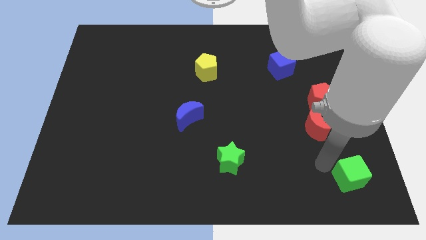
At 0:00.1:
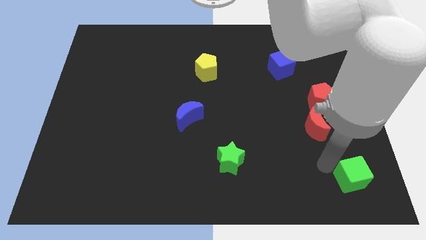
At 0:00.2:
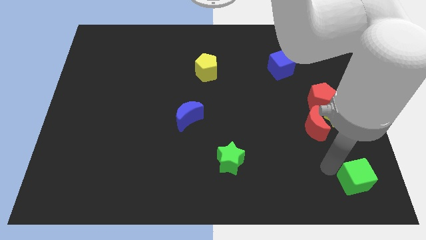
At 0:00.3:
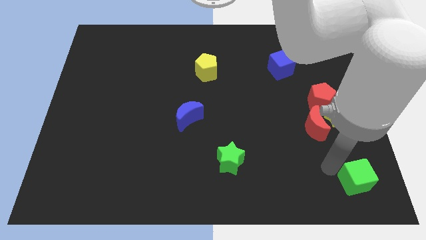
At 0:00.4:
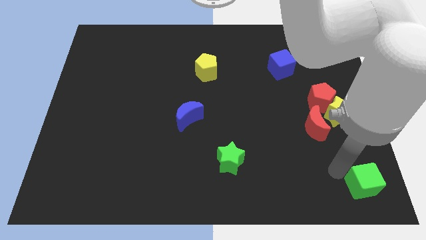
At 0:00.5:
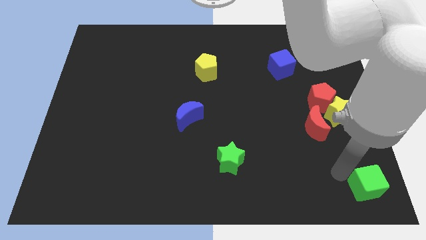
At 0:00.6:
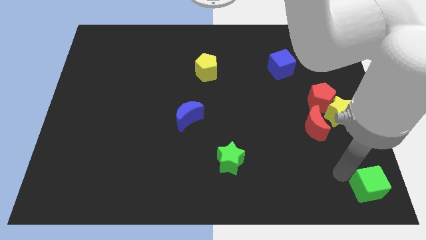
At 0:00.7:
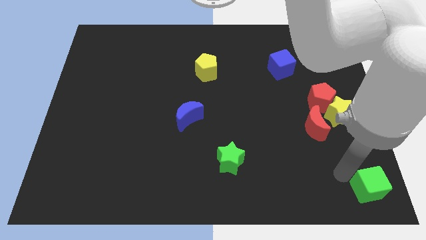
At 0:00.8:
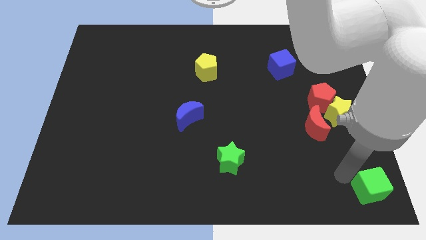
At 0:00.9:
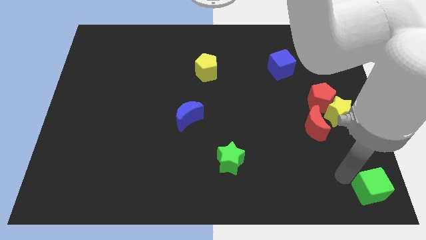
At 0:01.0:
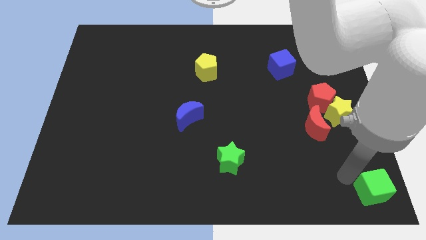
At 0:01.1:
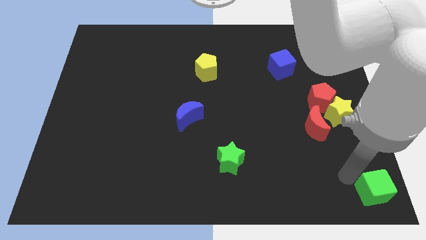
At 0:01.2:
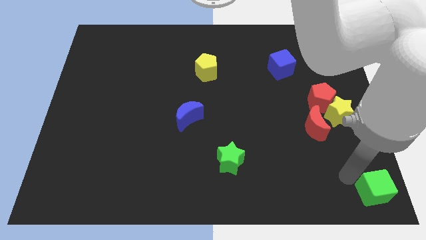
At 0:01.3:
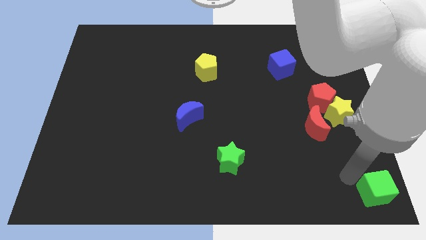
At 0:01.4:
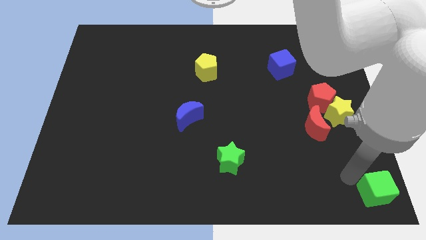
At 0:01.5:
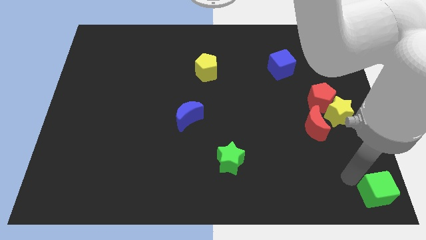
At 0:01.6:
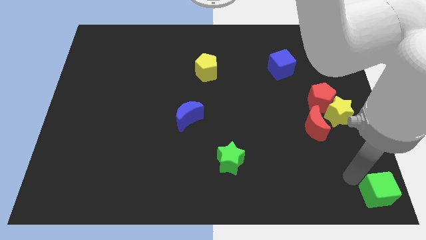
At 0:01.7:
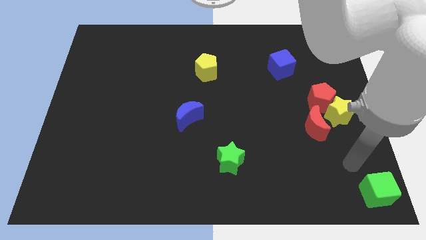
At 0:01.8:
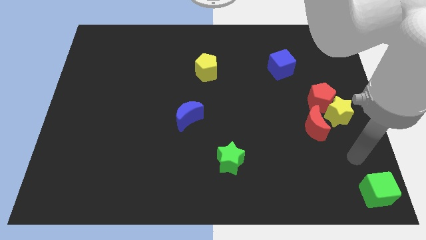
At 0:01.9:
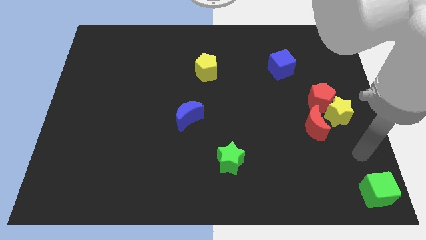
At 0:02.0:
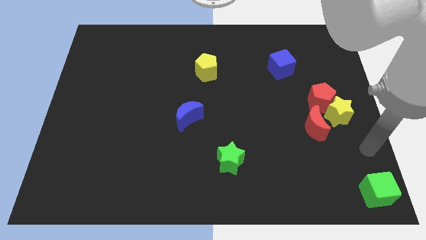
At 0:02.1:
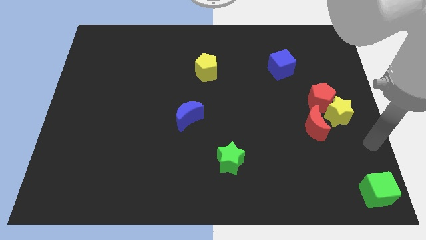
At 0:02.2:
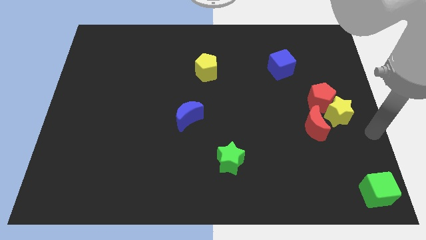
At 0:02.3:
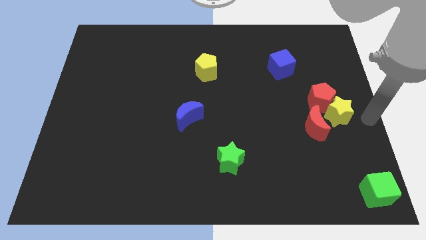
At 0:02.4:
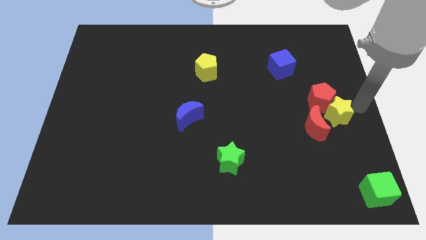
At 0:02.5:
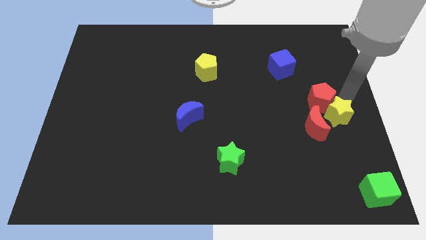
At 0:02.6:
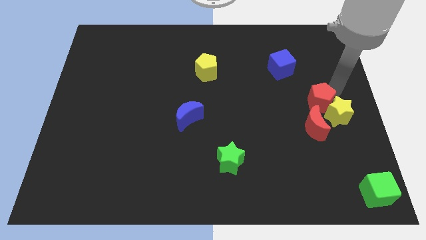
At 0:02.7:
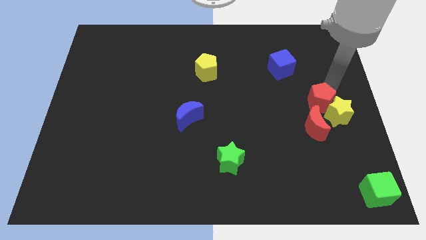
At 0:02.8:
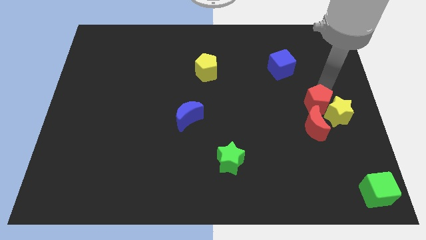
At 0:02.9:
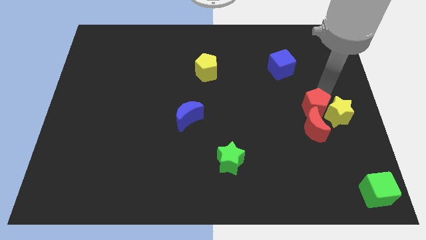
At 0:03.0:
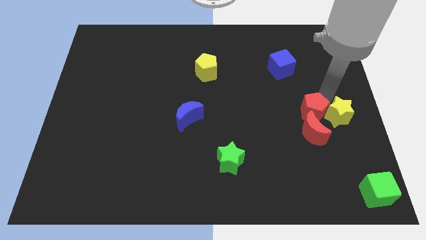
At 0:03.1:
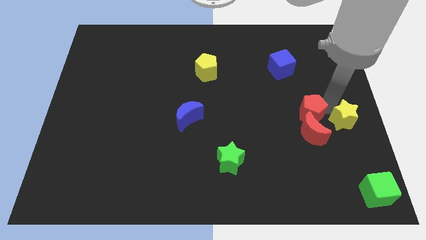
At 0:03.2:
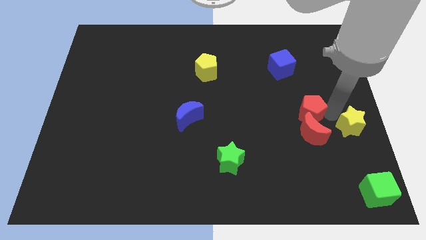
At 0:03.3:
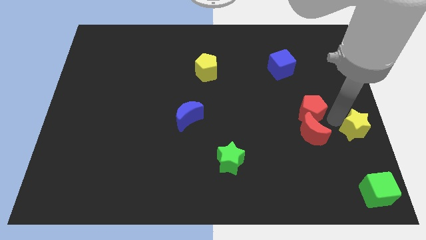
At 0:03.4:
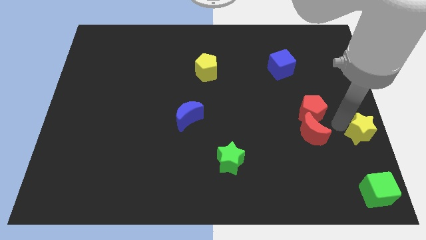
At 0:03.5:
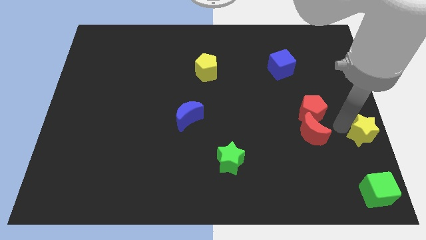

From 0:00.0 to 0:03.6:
move the green cube to the bottom right corner of board

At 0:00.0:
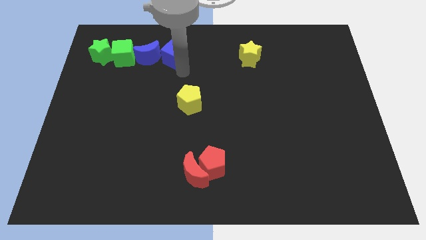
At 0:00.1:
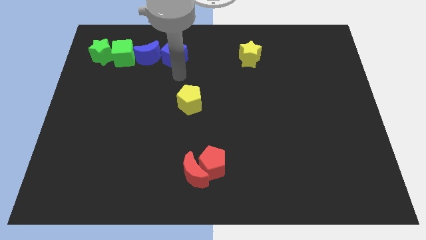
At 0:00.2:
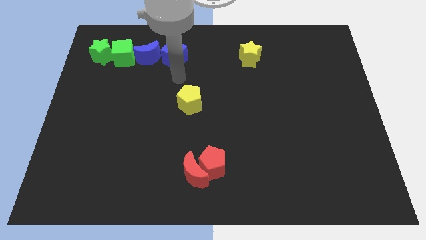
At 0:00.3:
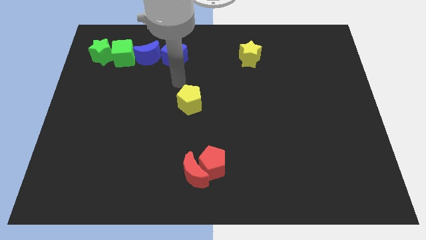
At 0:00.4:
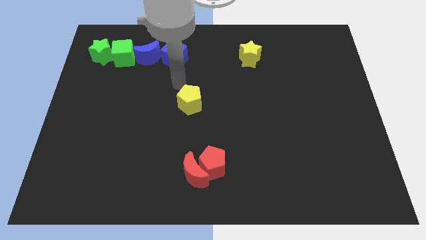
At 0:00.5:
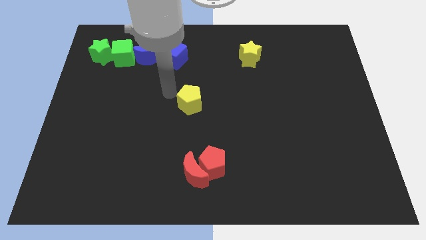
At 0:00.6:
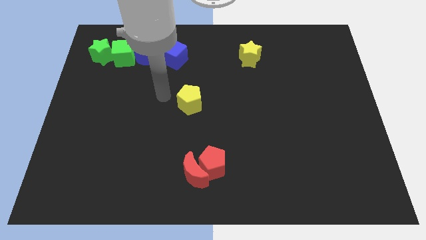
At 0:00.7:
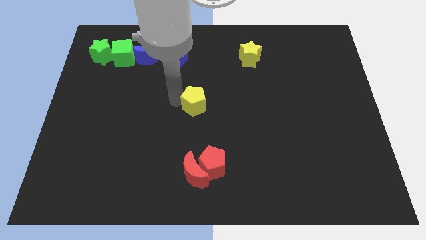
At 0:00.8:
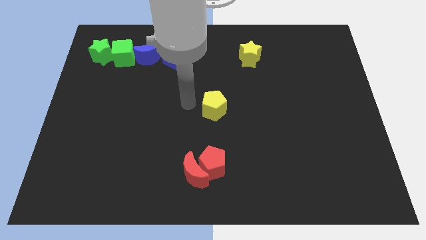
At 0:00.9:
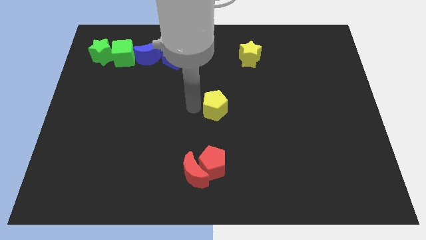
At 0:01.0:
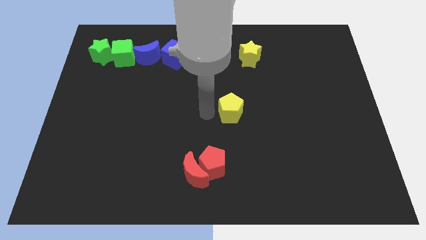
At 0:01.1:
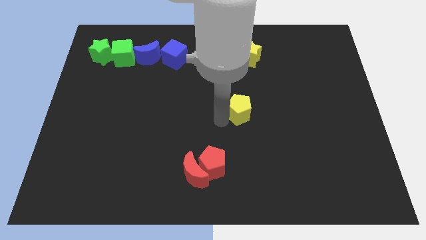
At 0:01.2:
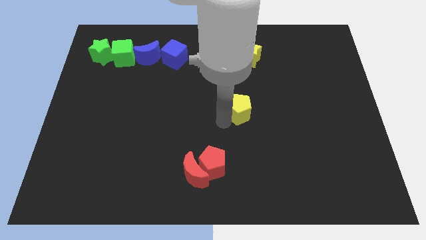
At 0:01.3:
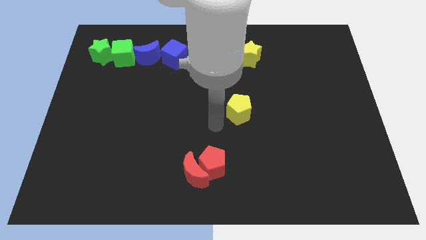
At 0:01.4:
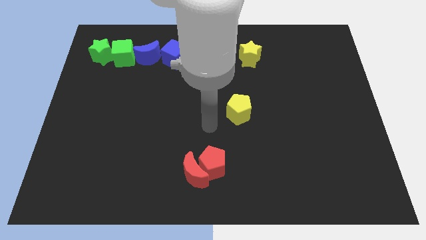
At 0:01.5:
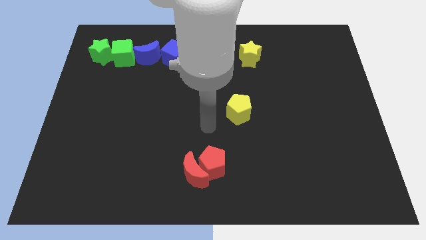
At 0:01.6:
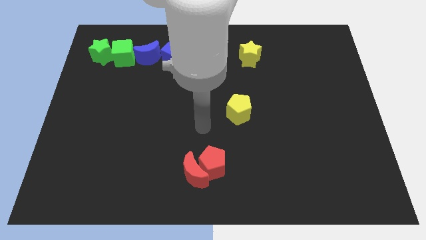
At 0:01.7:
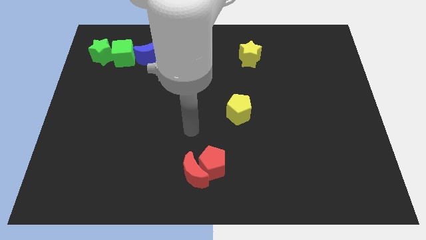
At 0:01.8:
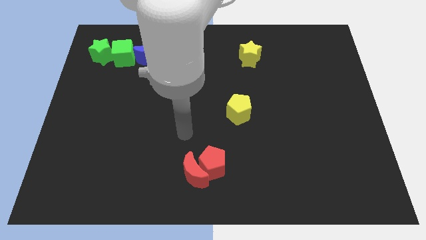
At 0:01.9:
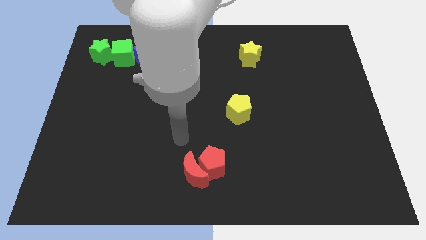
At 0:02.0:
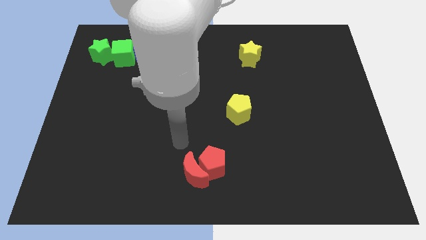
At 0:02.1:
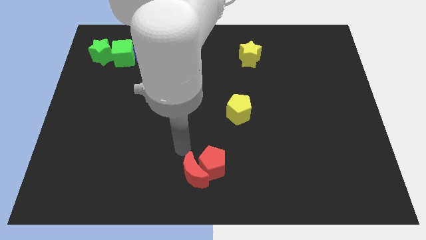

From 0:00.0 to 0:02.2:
place the yellow pentagon below the yellow star

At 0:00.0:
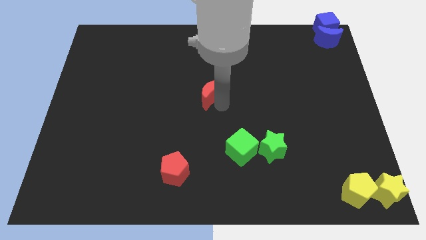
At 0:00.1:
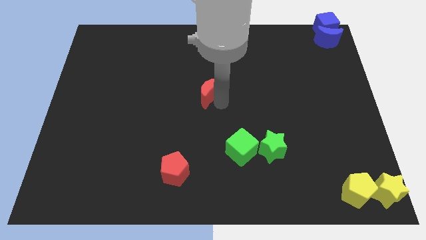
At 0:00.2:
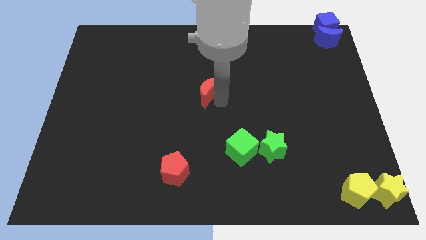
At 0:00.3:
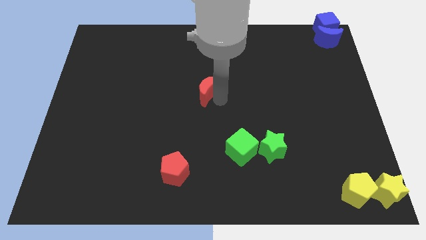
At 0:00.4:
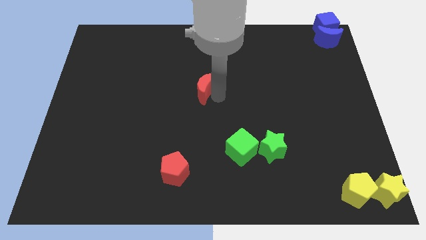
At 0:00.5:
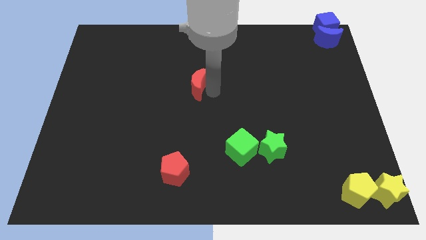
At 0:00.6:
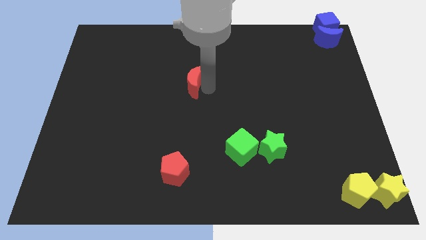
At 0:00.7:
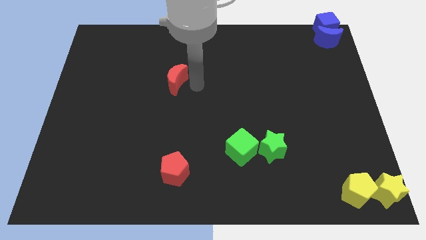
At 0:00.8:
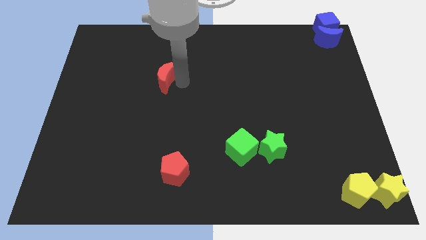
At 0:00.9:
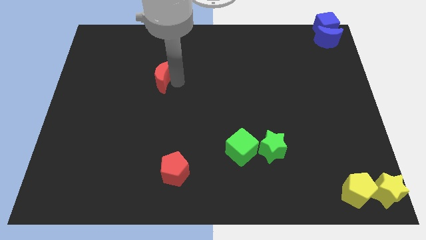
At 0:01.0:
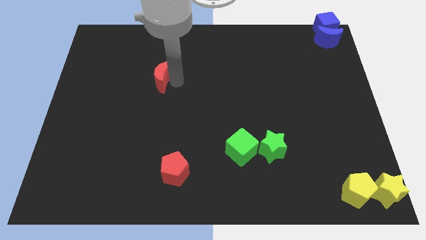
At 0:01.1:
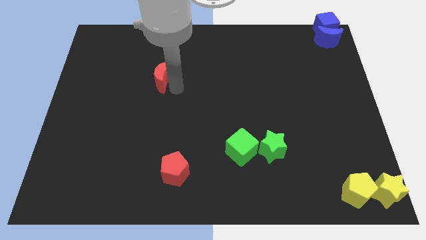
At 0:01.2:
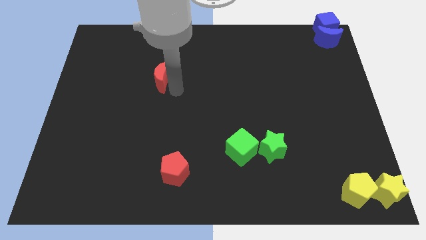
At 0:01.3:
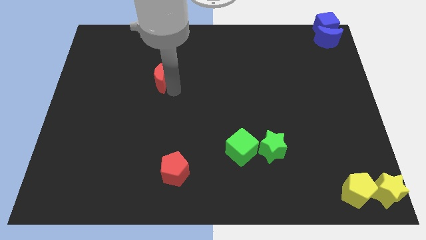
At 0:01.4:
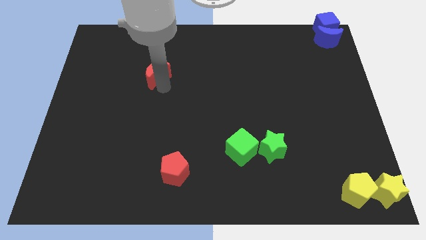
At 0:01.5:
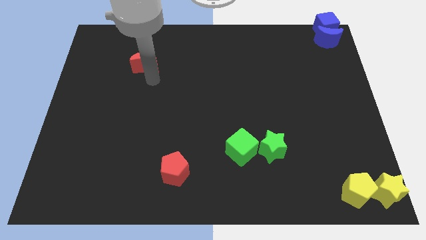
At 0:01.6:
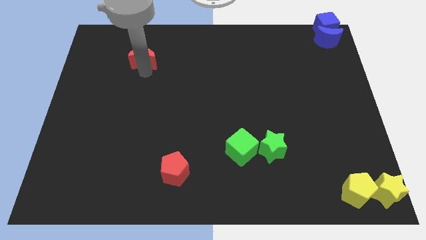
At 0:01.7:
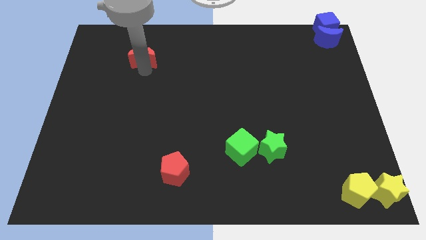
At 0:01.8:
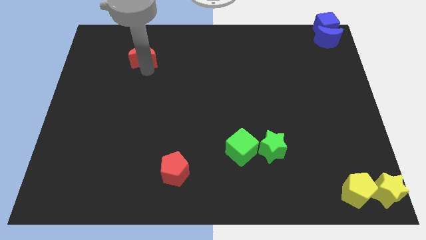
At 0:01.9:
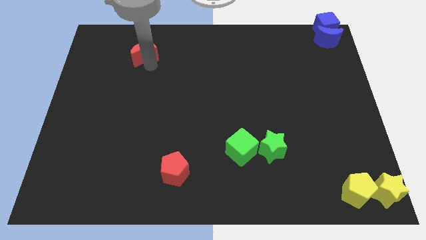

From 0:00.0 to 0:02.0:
move the red crescent to the top left of the board

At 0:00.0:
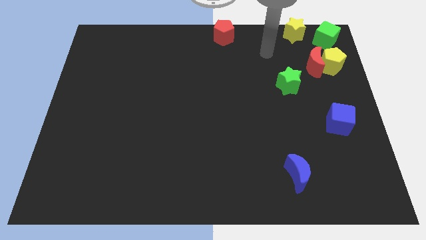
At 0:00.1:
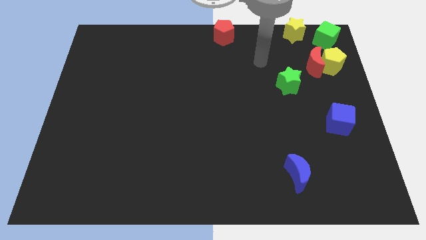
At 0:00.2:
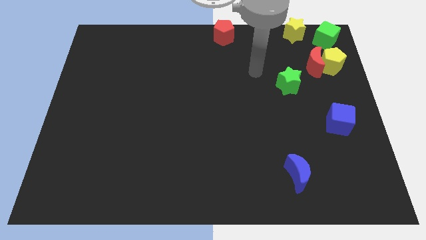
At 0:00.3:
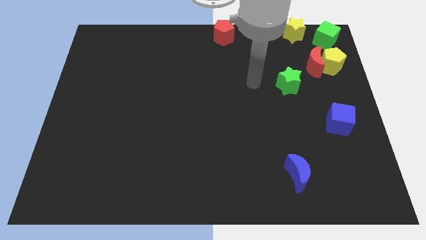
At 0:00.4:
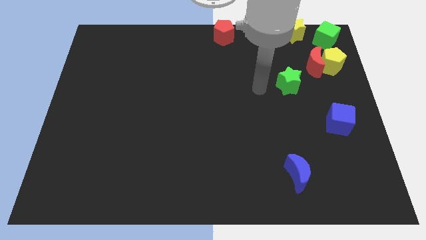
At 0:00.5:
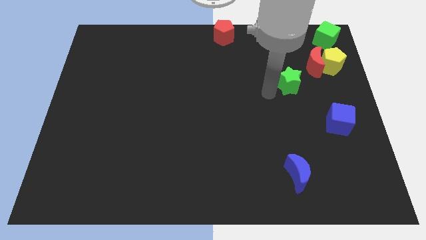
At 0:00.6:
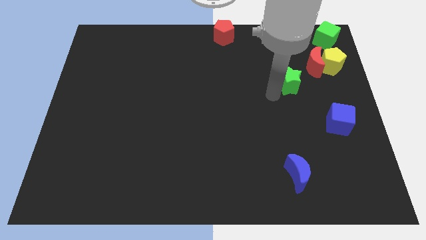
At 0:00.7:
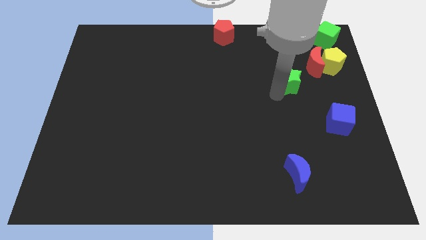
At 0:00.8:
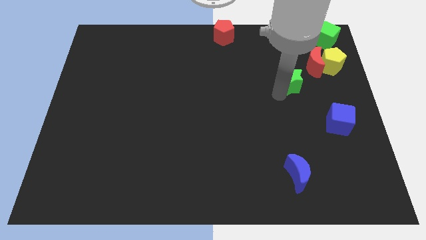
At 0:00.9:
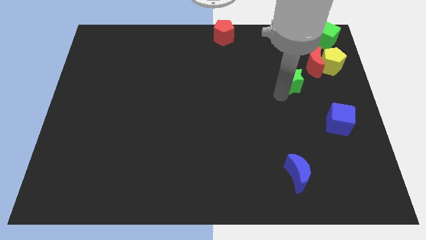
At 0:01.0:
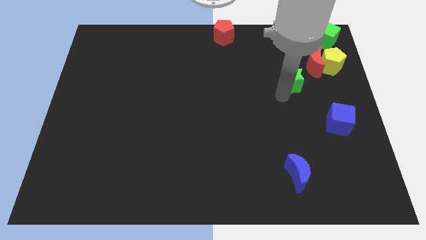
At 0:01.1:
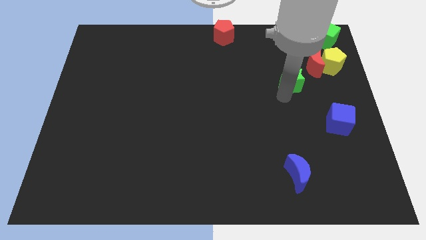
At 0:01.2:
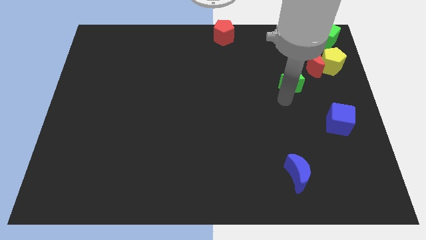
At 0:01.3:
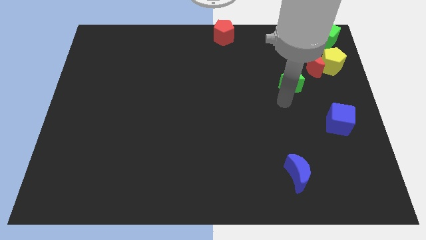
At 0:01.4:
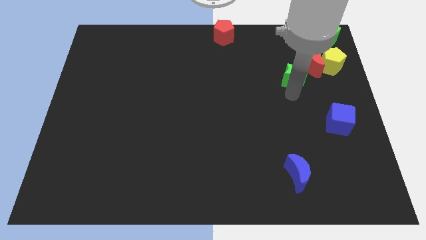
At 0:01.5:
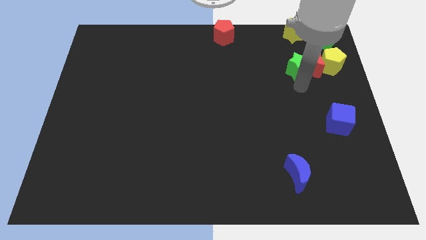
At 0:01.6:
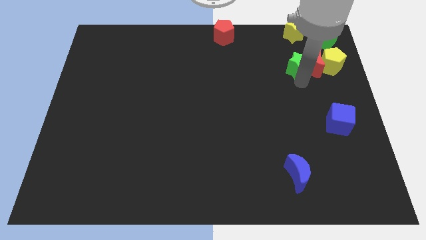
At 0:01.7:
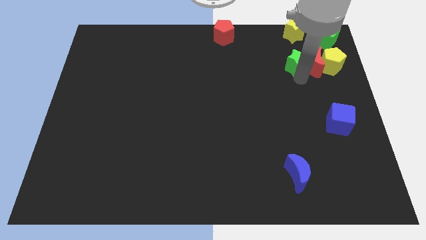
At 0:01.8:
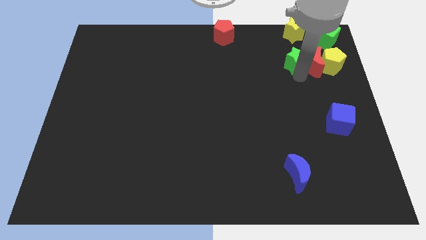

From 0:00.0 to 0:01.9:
push the green star to the left of the red crescent
